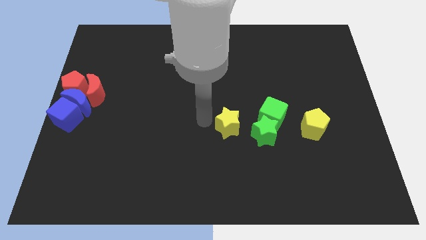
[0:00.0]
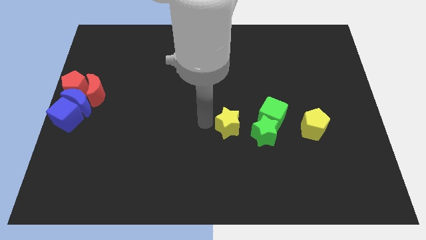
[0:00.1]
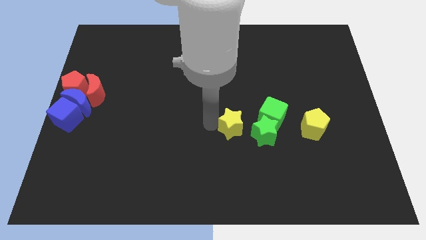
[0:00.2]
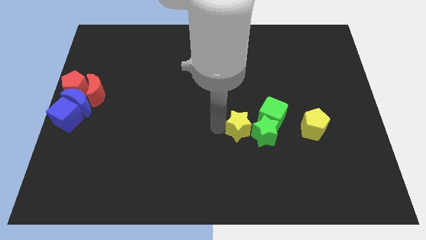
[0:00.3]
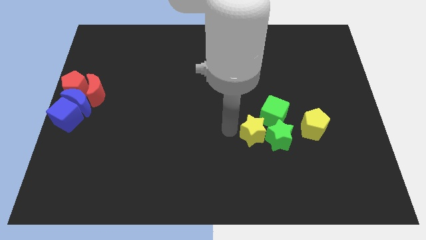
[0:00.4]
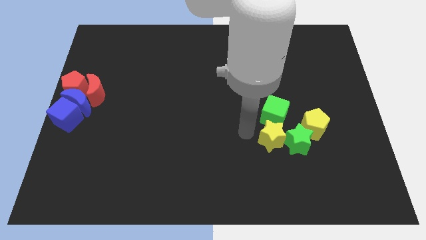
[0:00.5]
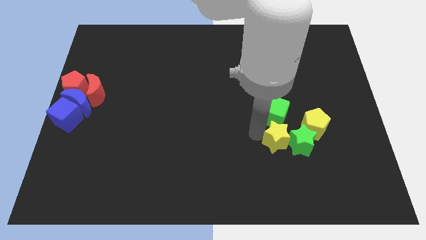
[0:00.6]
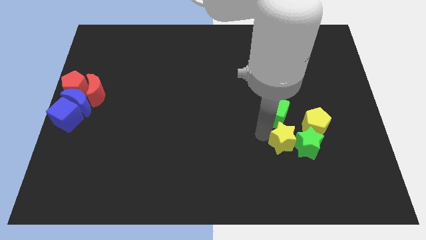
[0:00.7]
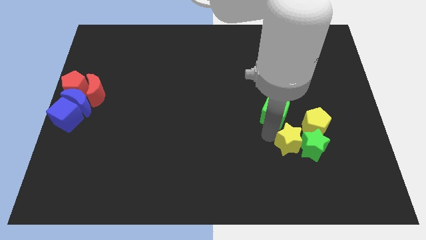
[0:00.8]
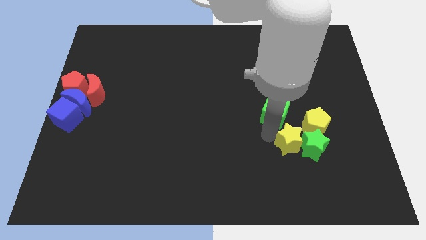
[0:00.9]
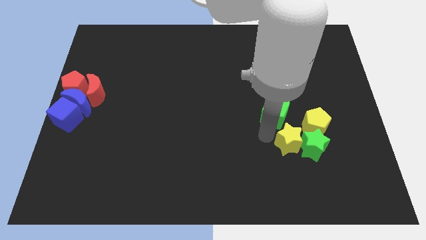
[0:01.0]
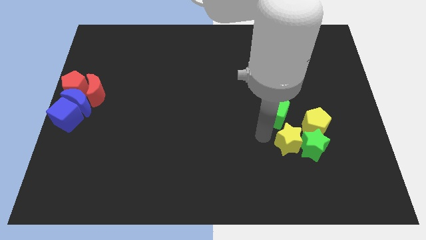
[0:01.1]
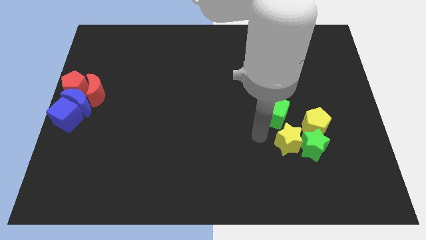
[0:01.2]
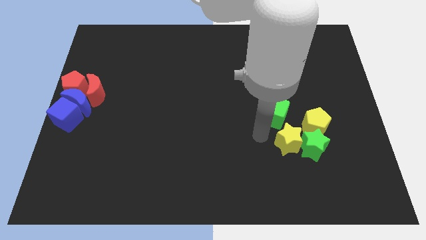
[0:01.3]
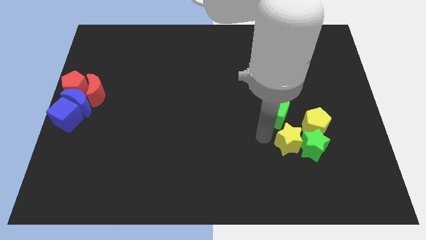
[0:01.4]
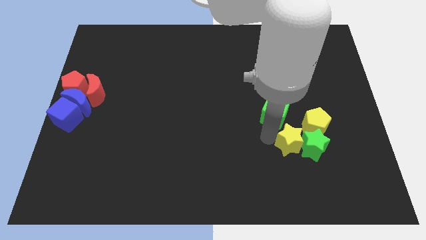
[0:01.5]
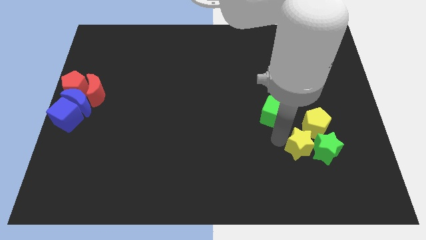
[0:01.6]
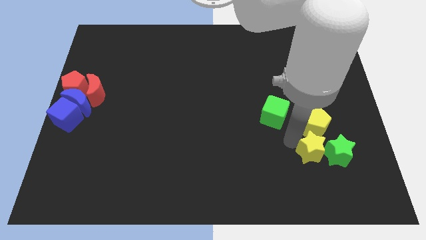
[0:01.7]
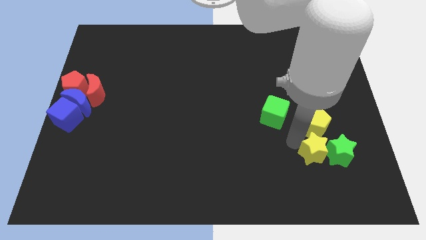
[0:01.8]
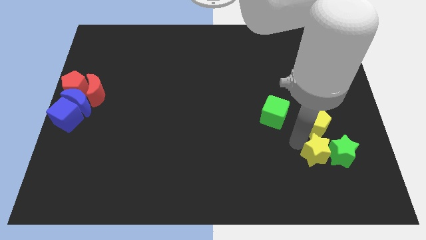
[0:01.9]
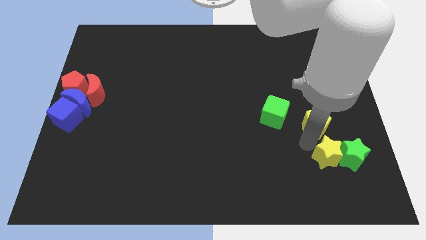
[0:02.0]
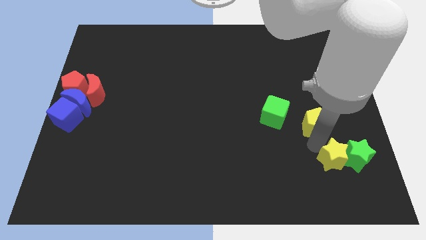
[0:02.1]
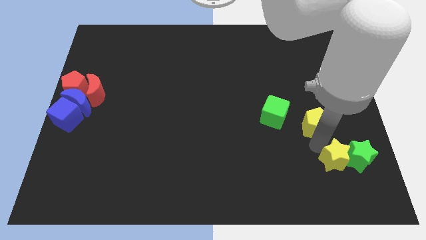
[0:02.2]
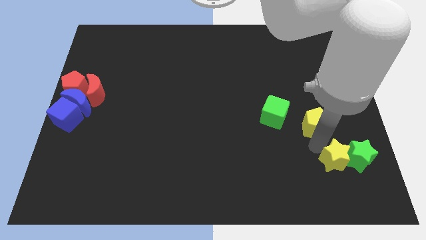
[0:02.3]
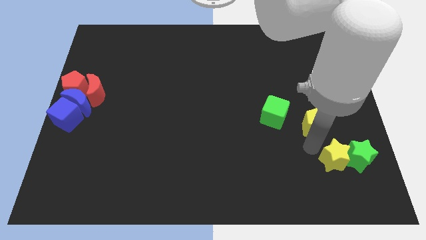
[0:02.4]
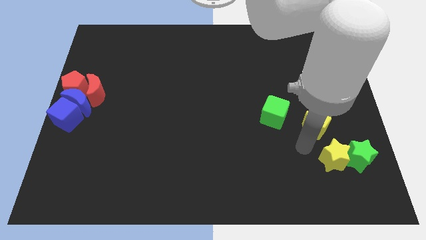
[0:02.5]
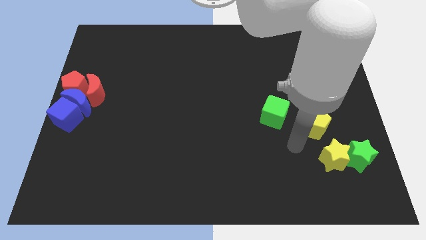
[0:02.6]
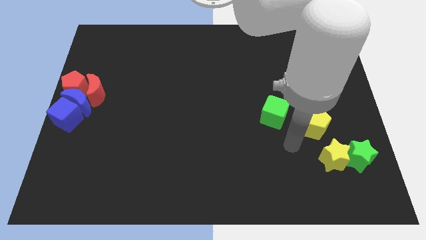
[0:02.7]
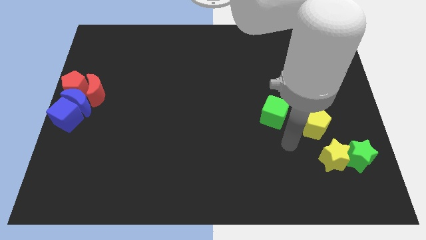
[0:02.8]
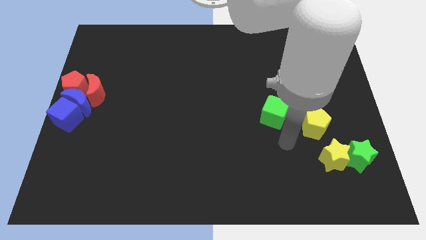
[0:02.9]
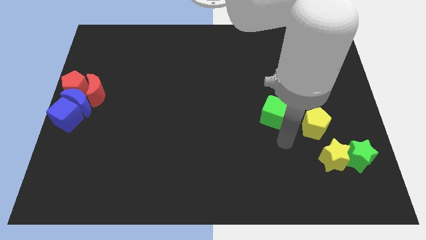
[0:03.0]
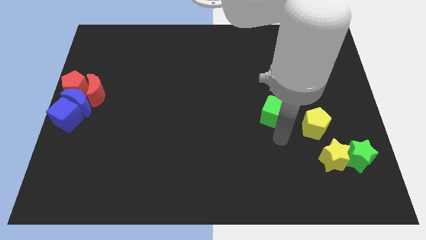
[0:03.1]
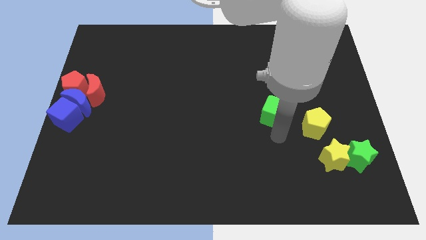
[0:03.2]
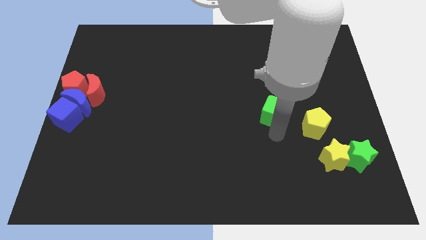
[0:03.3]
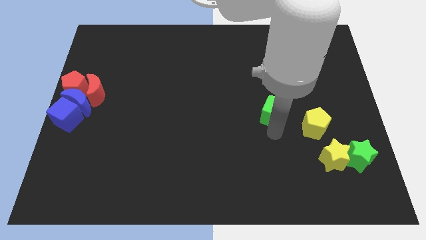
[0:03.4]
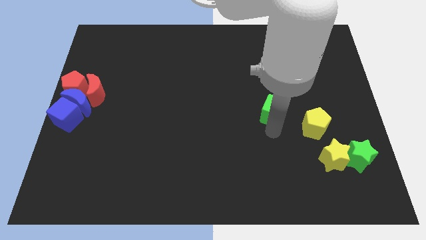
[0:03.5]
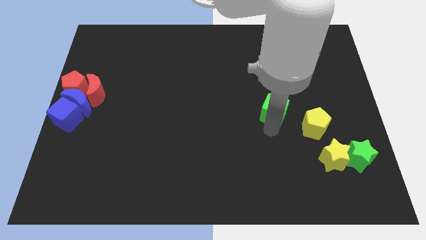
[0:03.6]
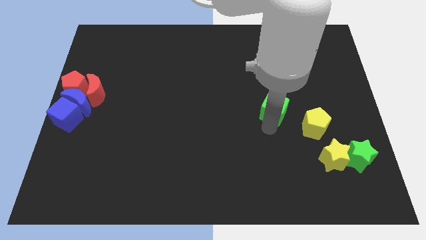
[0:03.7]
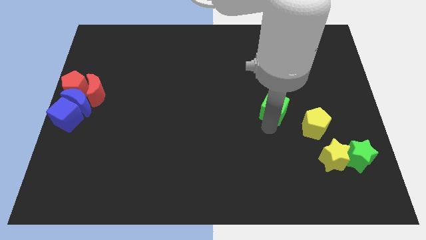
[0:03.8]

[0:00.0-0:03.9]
push the green star with the yellow star

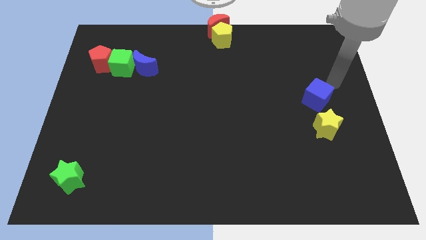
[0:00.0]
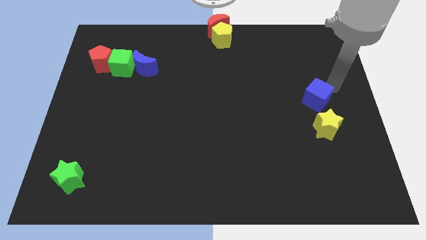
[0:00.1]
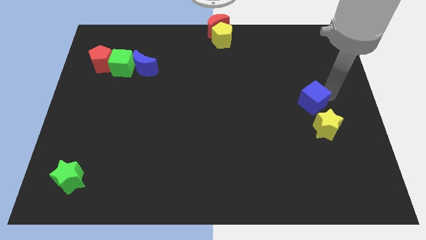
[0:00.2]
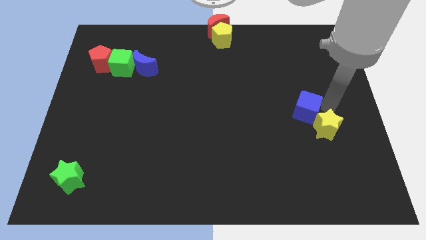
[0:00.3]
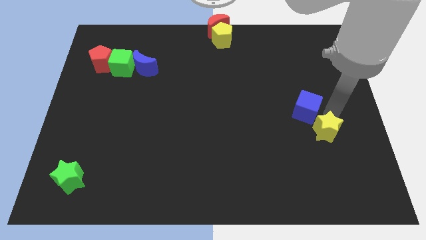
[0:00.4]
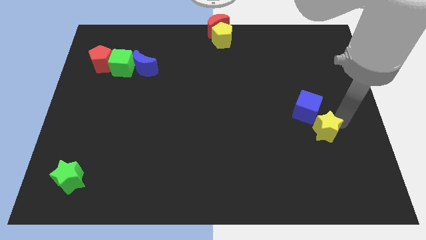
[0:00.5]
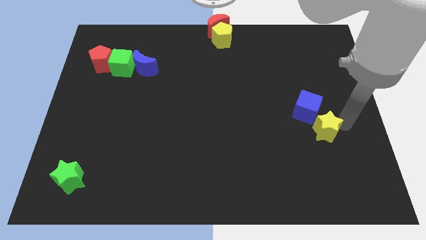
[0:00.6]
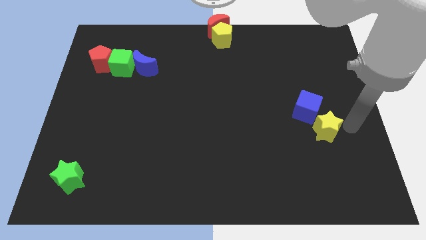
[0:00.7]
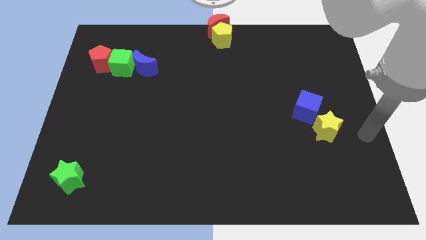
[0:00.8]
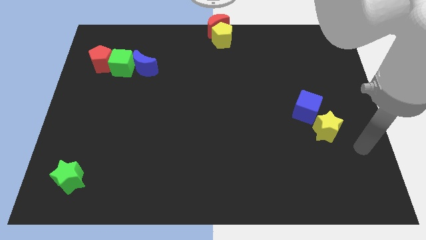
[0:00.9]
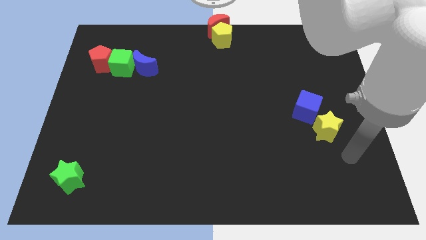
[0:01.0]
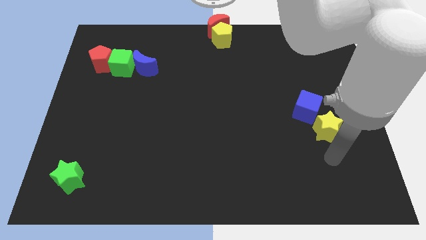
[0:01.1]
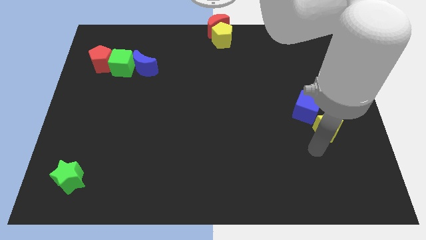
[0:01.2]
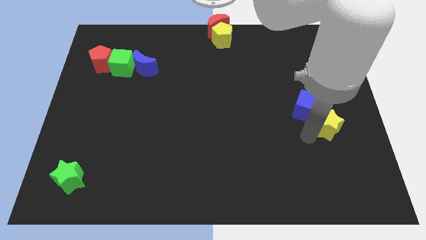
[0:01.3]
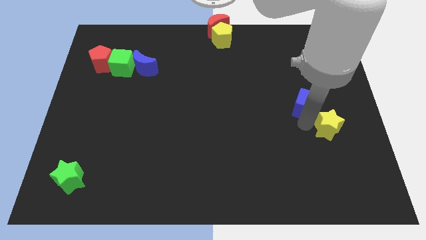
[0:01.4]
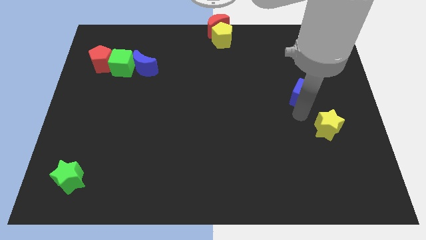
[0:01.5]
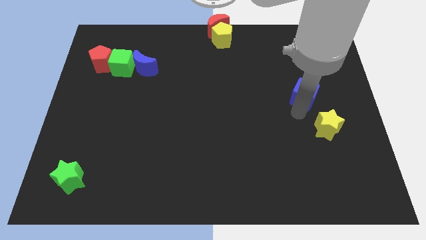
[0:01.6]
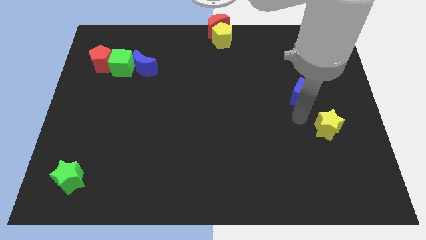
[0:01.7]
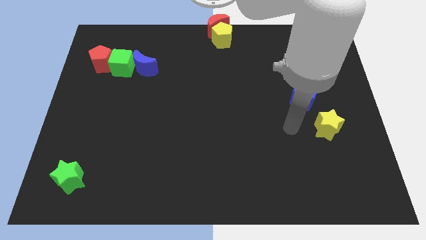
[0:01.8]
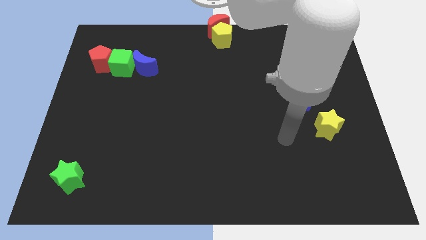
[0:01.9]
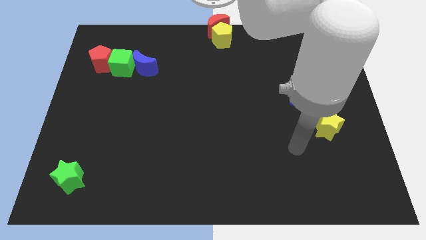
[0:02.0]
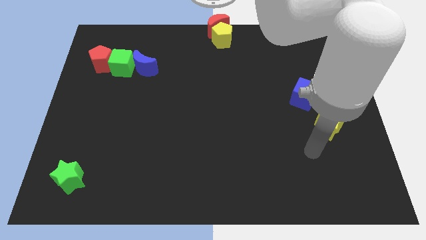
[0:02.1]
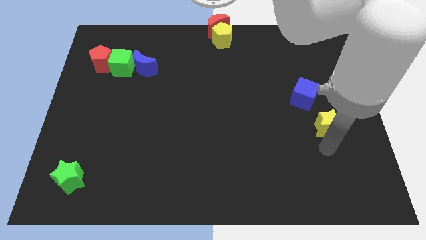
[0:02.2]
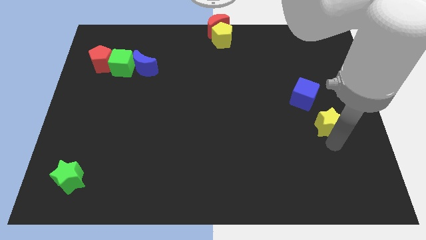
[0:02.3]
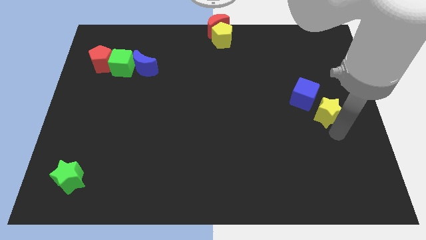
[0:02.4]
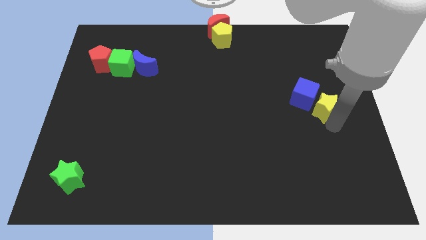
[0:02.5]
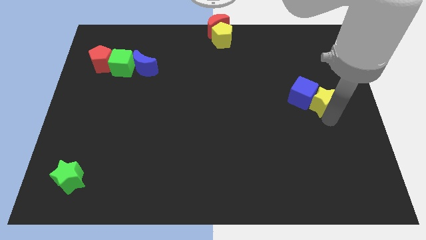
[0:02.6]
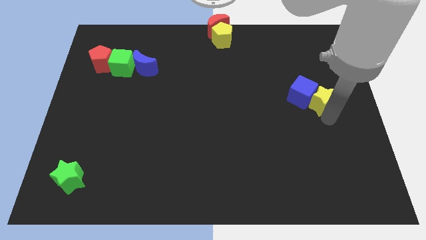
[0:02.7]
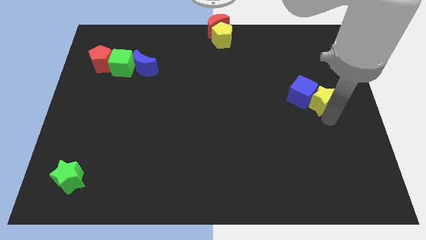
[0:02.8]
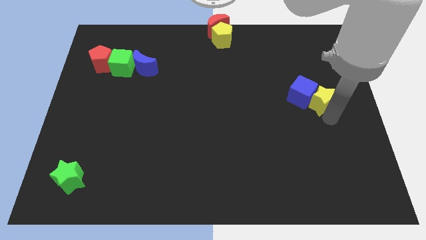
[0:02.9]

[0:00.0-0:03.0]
place the yellow star to the right of the blue cube

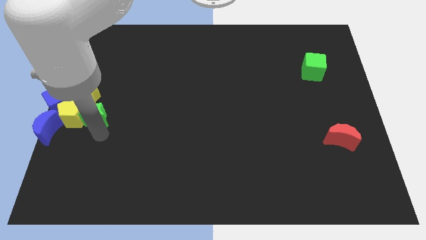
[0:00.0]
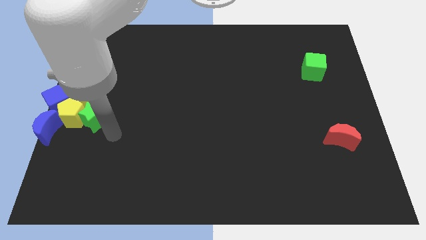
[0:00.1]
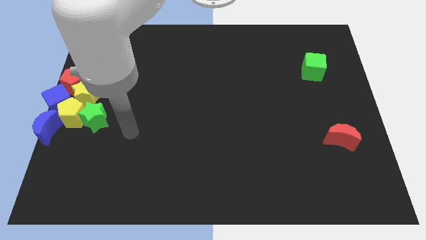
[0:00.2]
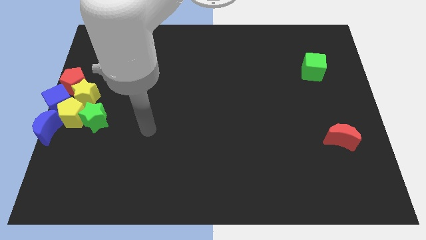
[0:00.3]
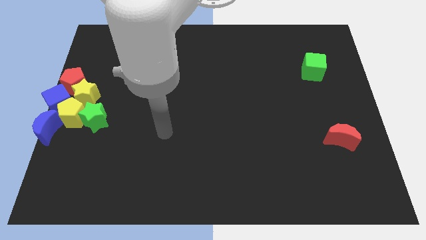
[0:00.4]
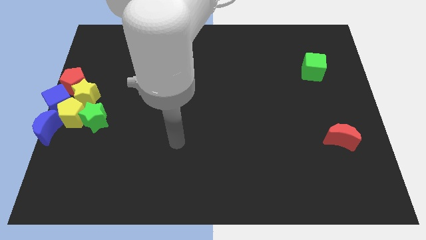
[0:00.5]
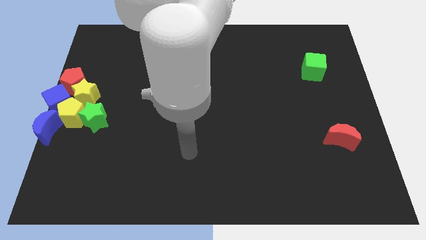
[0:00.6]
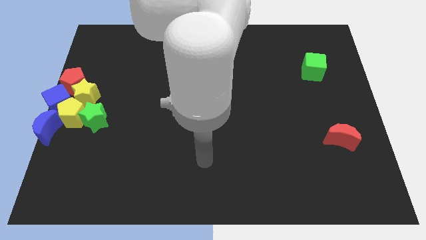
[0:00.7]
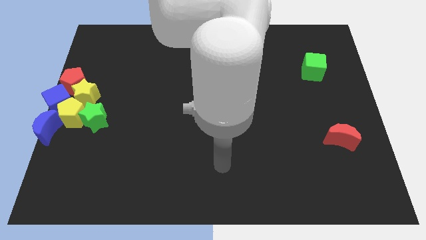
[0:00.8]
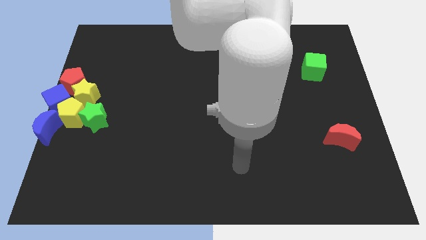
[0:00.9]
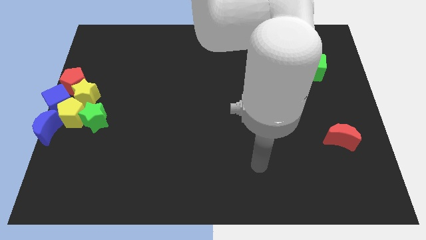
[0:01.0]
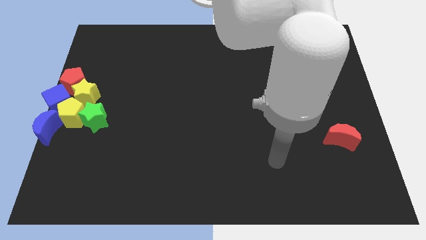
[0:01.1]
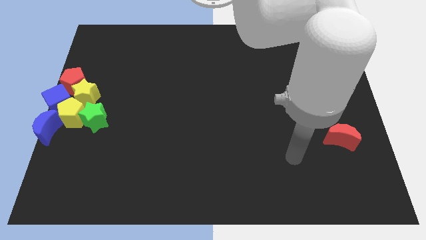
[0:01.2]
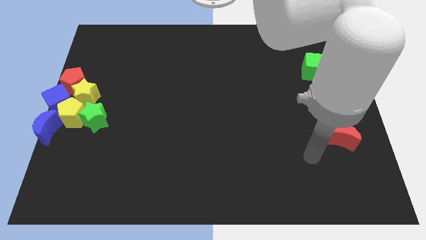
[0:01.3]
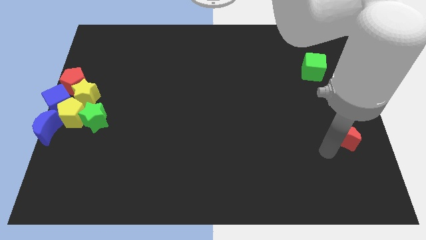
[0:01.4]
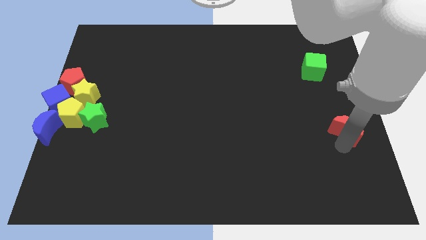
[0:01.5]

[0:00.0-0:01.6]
touch the bottom side of the red moon

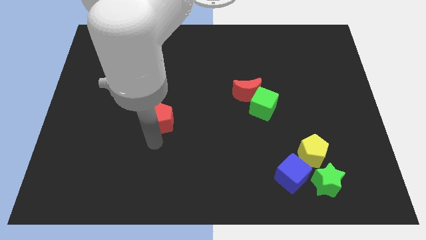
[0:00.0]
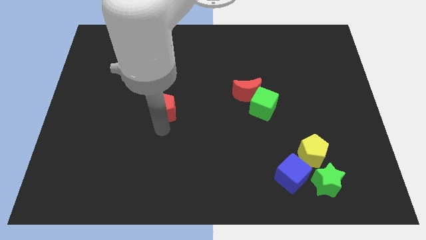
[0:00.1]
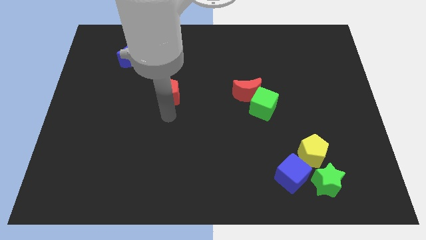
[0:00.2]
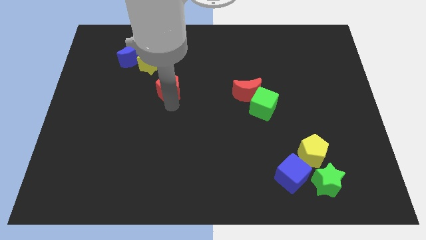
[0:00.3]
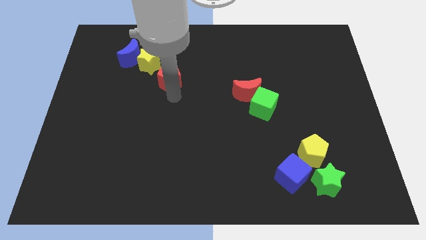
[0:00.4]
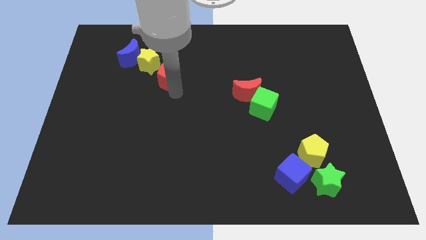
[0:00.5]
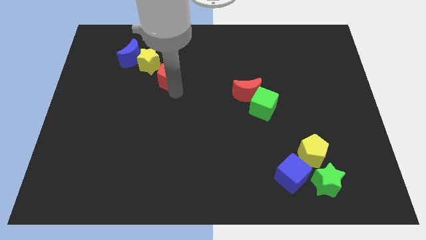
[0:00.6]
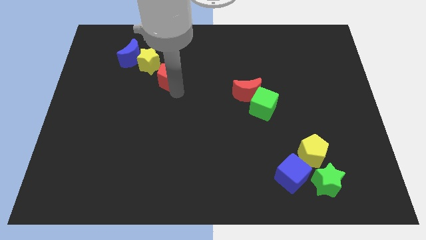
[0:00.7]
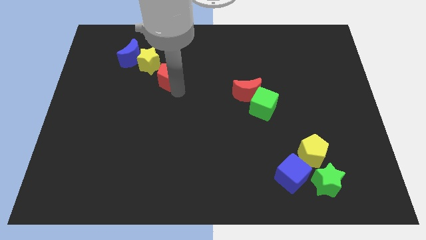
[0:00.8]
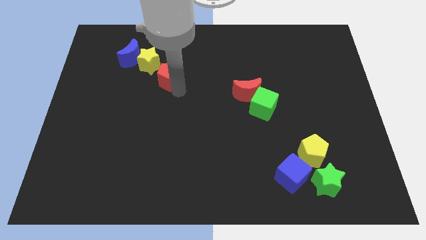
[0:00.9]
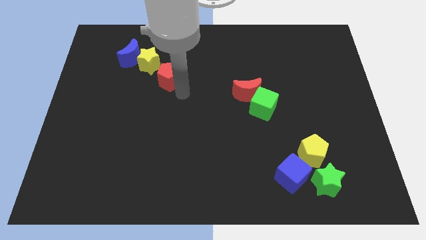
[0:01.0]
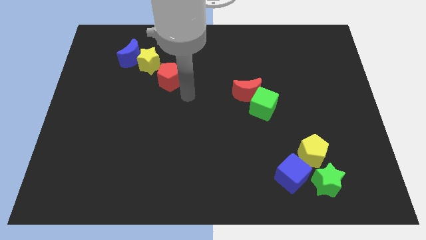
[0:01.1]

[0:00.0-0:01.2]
move the red pentagon close to the yellow star
